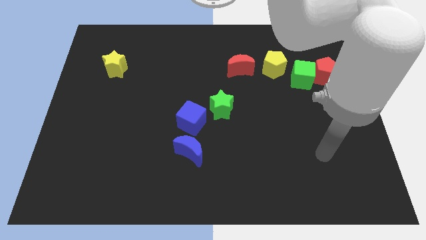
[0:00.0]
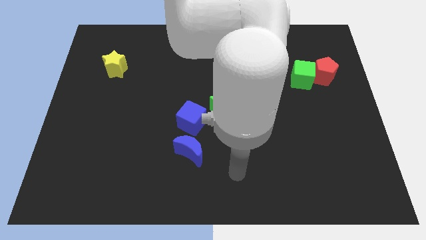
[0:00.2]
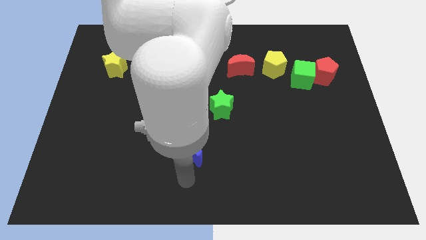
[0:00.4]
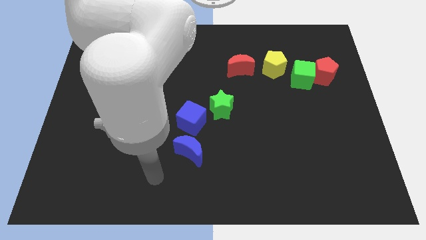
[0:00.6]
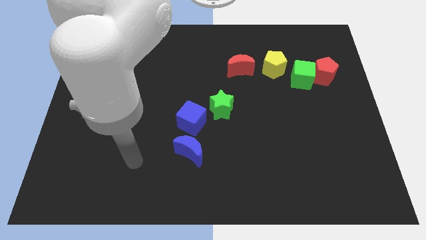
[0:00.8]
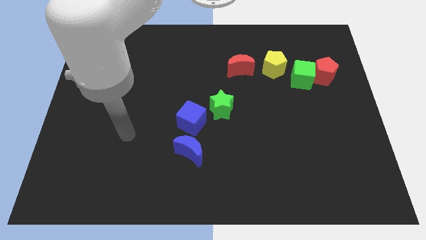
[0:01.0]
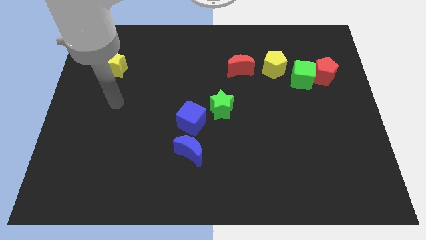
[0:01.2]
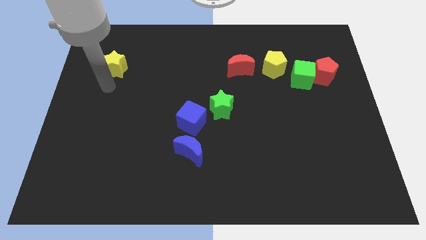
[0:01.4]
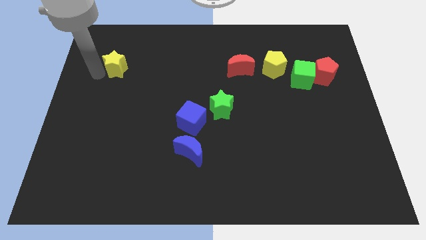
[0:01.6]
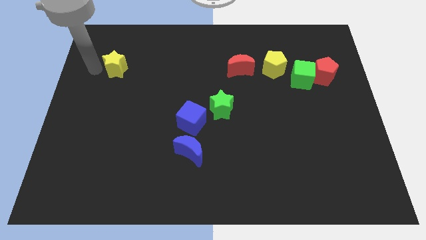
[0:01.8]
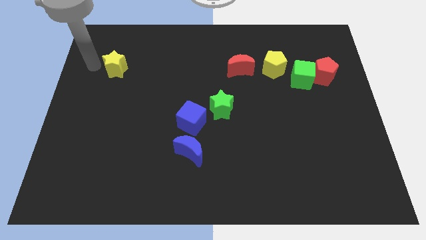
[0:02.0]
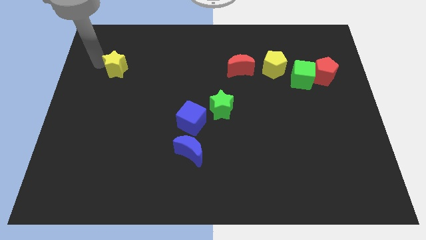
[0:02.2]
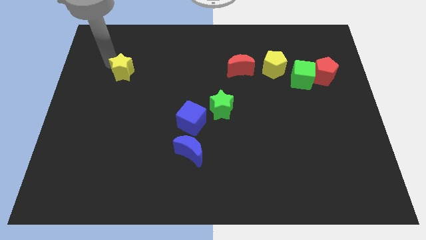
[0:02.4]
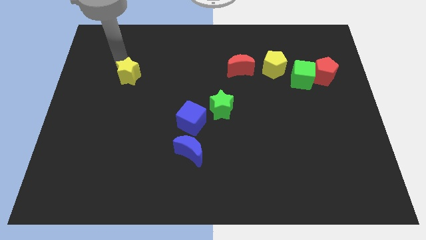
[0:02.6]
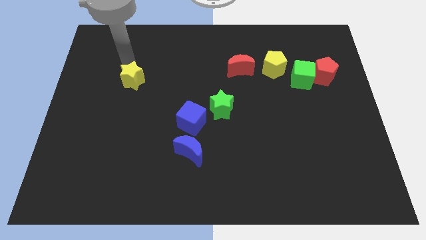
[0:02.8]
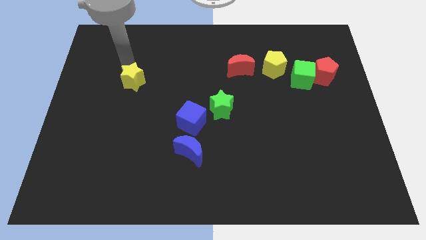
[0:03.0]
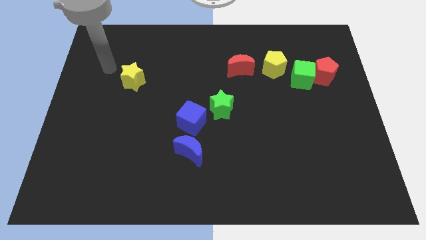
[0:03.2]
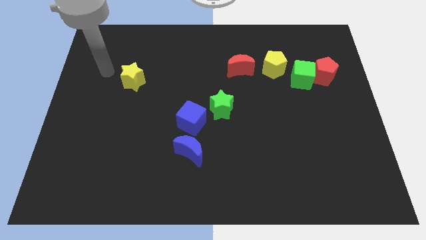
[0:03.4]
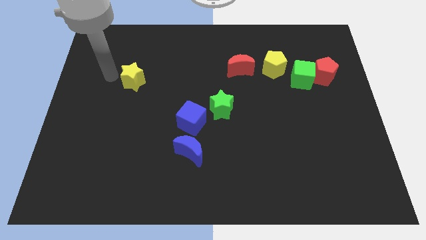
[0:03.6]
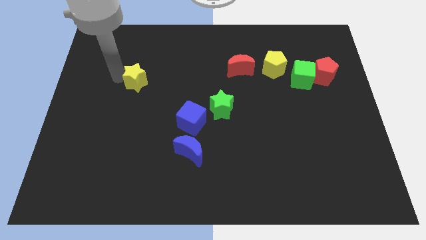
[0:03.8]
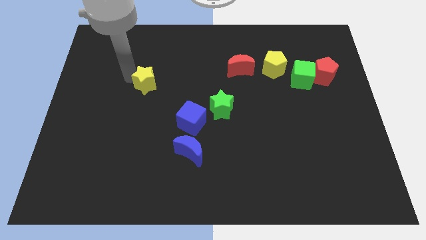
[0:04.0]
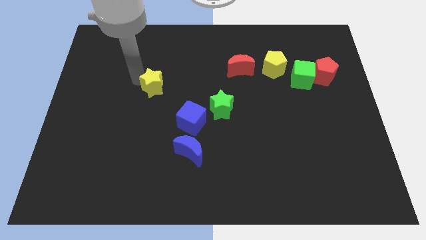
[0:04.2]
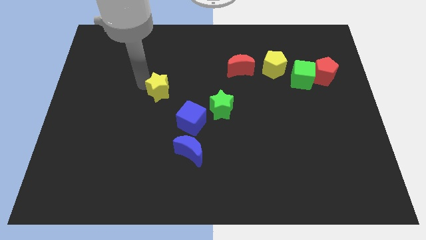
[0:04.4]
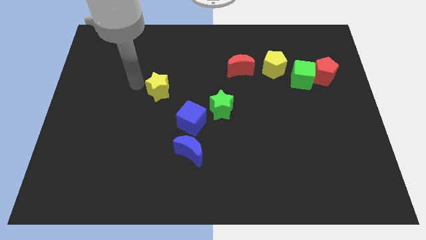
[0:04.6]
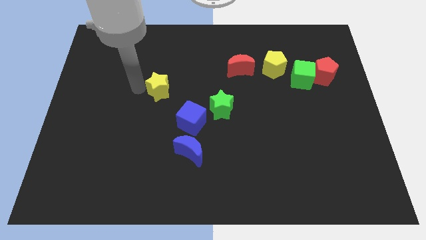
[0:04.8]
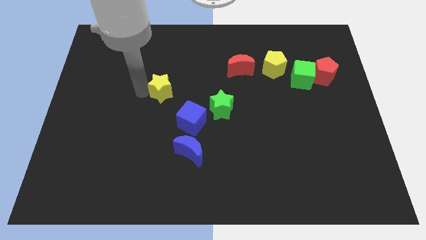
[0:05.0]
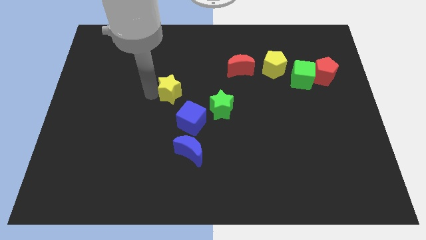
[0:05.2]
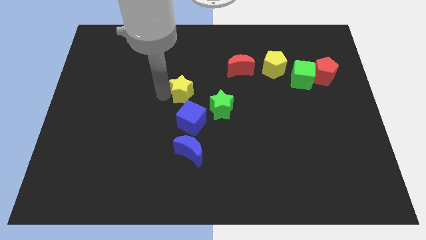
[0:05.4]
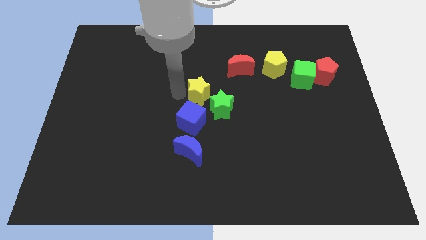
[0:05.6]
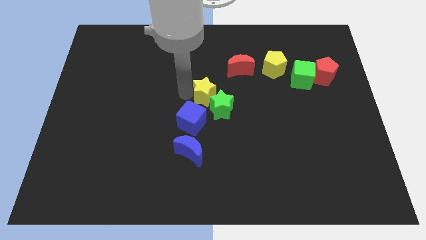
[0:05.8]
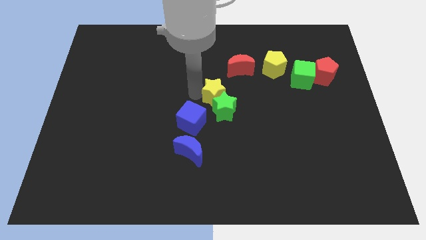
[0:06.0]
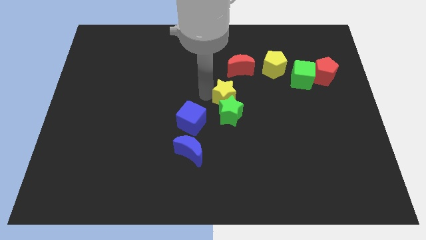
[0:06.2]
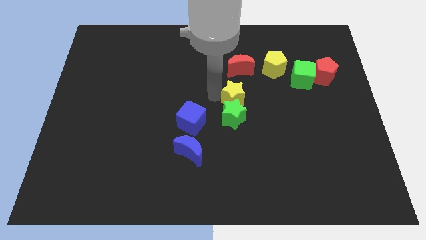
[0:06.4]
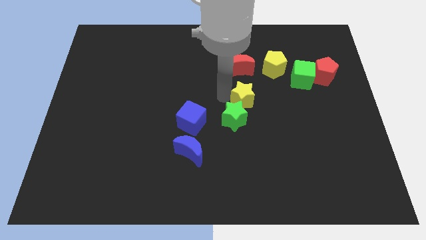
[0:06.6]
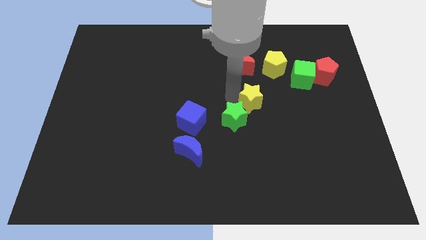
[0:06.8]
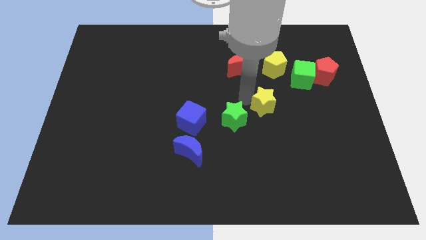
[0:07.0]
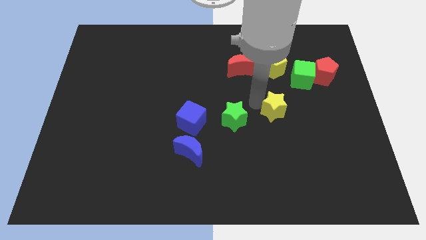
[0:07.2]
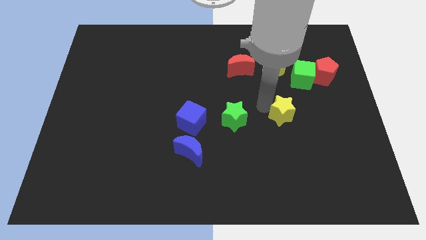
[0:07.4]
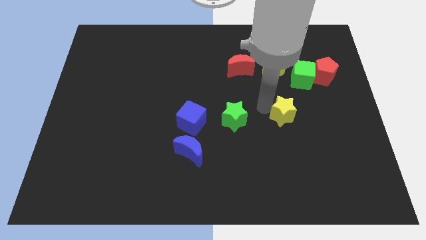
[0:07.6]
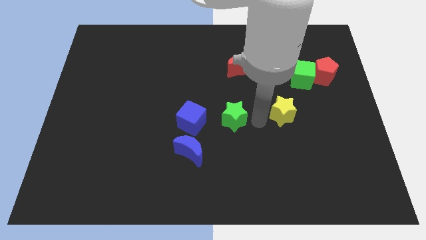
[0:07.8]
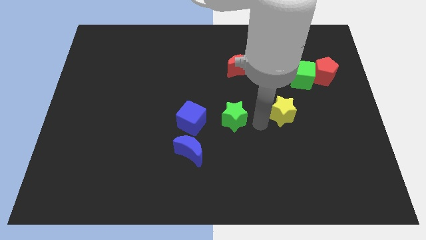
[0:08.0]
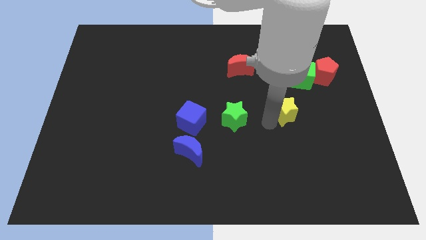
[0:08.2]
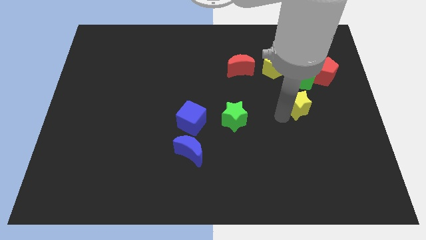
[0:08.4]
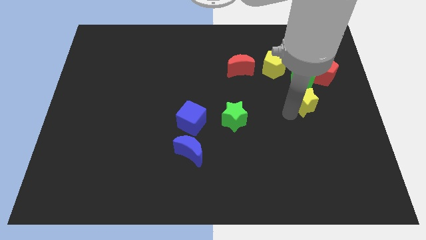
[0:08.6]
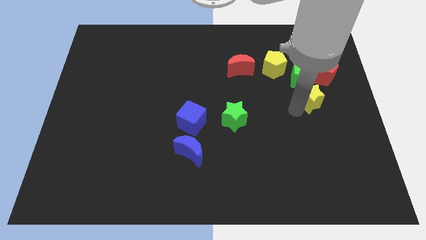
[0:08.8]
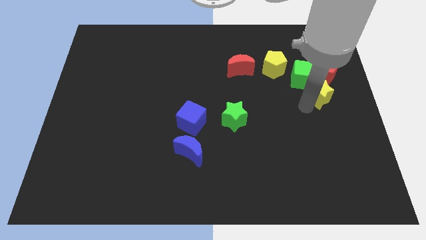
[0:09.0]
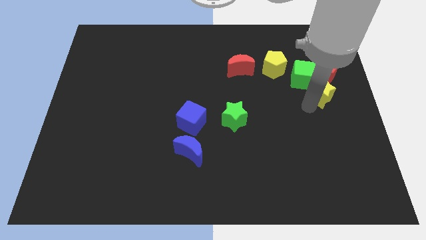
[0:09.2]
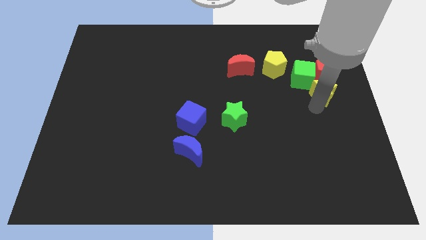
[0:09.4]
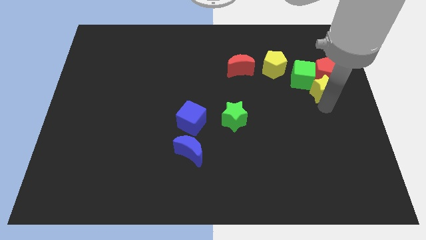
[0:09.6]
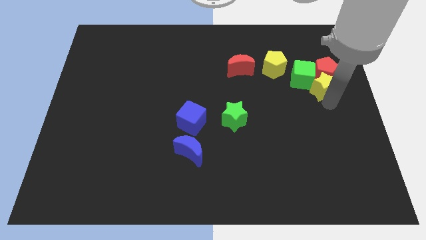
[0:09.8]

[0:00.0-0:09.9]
move the yellow star next to the red pentagon

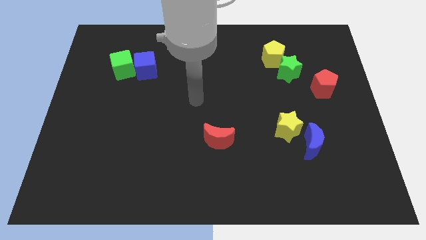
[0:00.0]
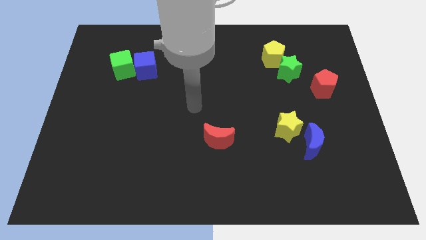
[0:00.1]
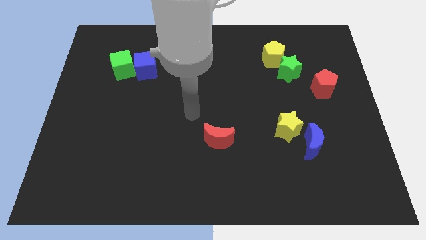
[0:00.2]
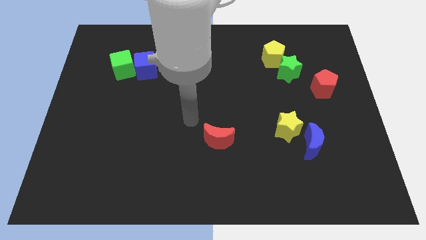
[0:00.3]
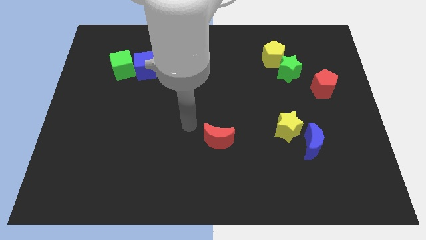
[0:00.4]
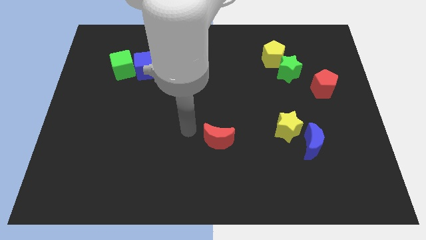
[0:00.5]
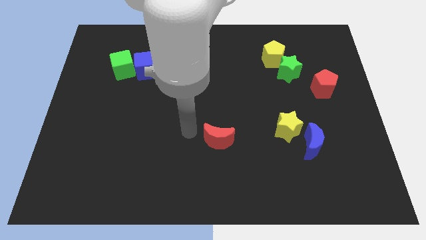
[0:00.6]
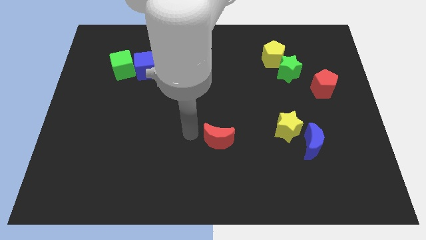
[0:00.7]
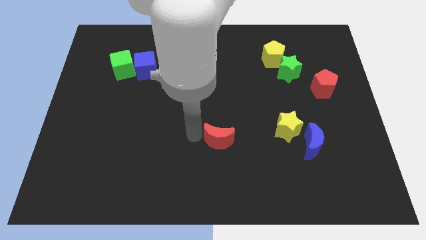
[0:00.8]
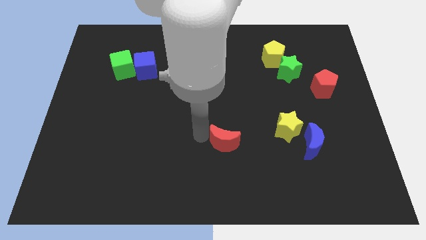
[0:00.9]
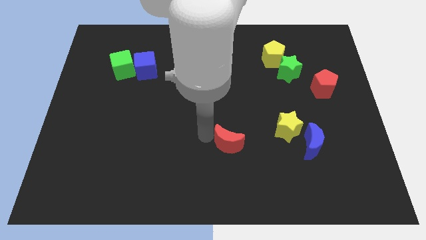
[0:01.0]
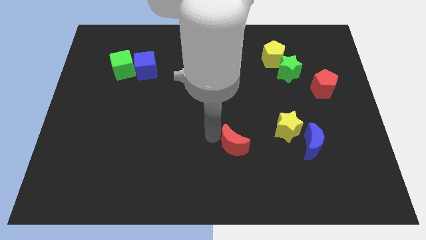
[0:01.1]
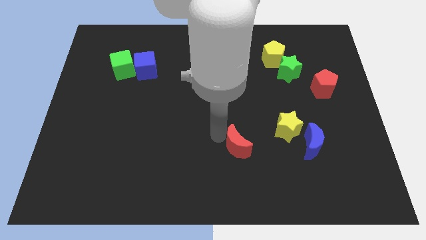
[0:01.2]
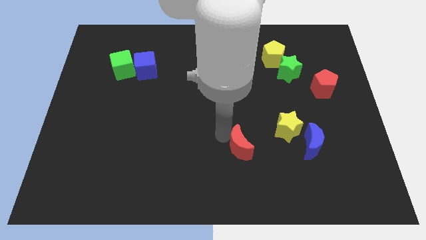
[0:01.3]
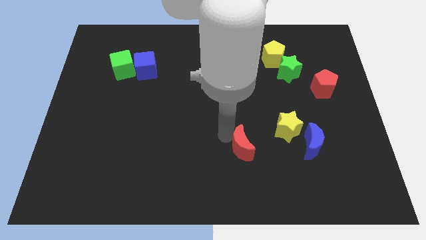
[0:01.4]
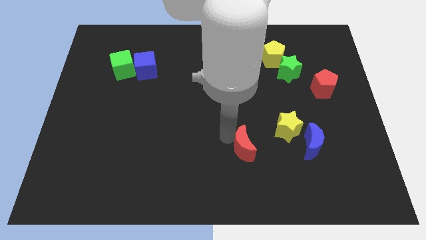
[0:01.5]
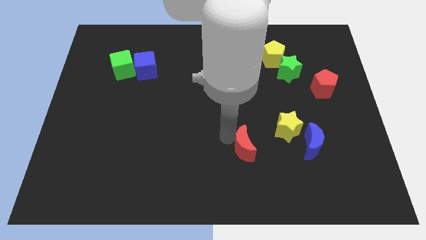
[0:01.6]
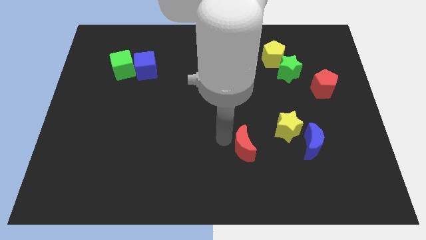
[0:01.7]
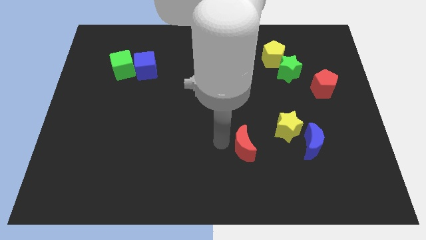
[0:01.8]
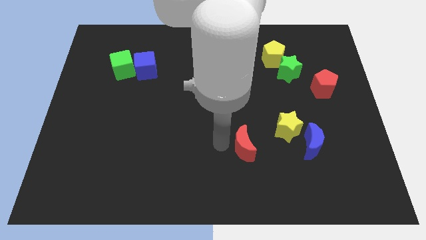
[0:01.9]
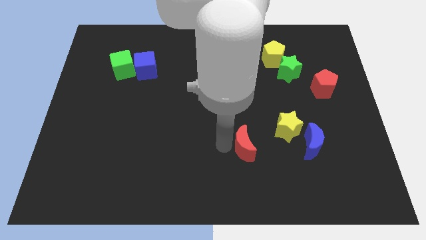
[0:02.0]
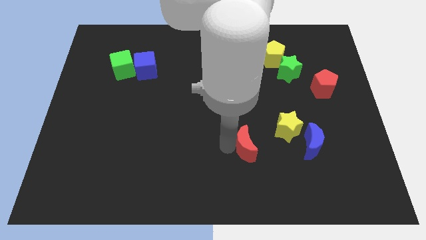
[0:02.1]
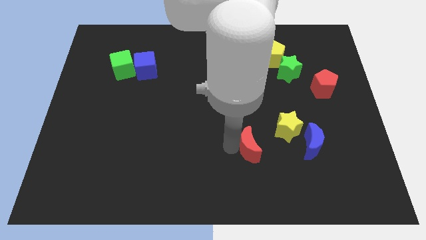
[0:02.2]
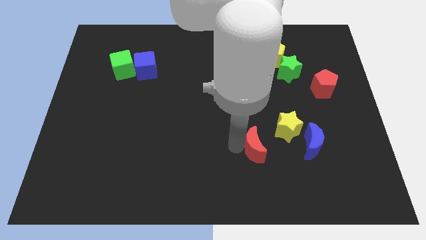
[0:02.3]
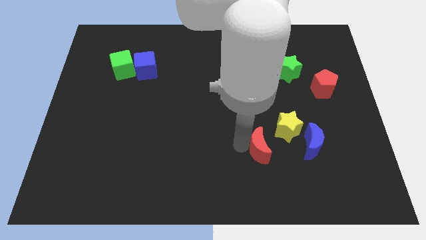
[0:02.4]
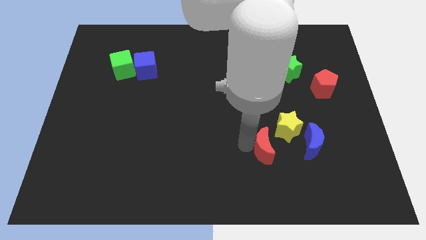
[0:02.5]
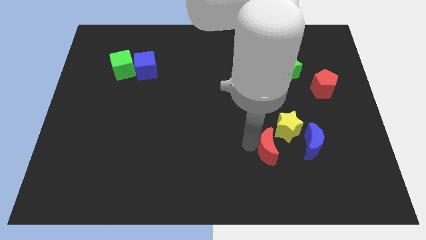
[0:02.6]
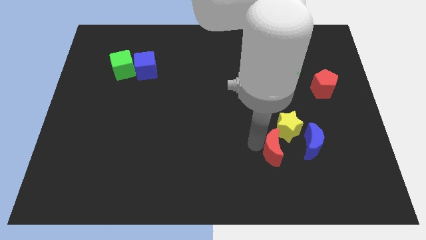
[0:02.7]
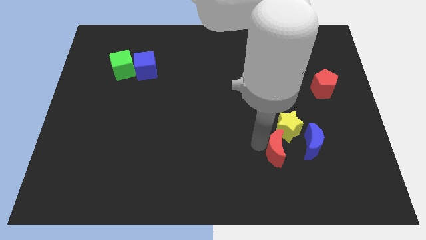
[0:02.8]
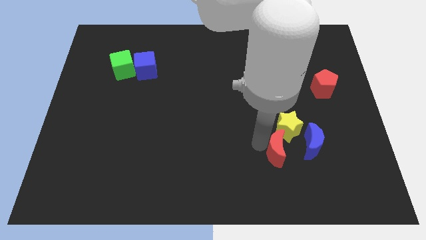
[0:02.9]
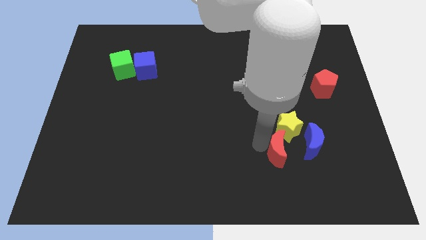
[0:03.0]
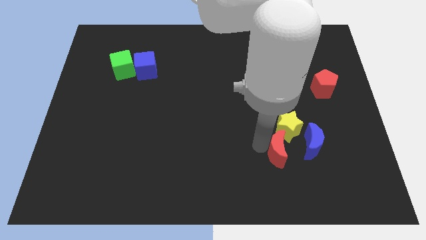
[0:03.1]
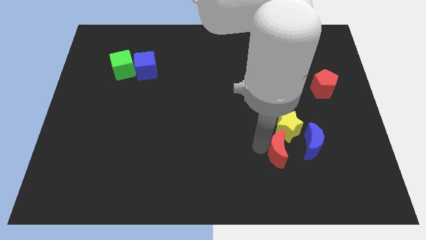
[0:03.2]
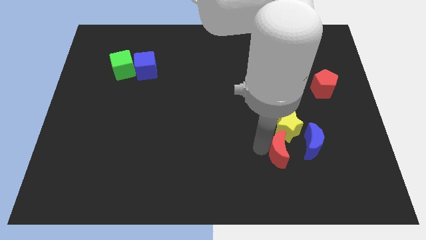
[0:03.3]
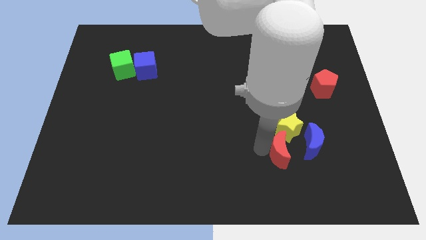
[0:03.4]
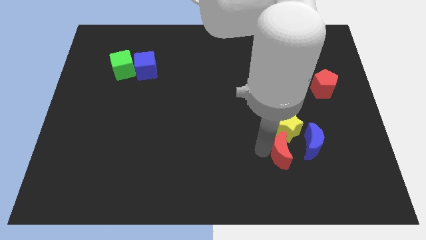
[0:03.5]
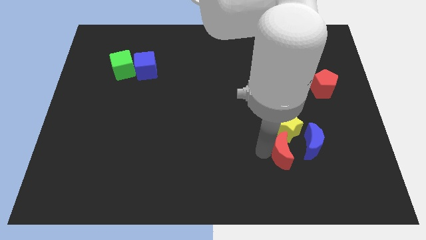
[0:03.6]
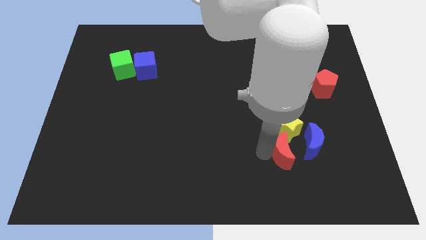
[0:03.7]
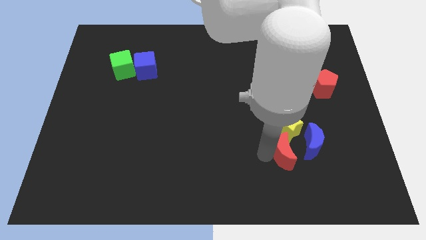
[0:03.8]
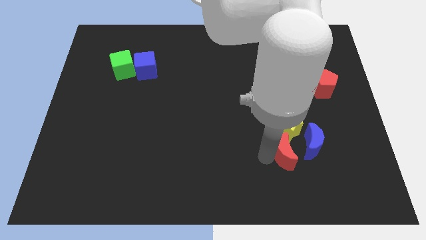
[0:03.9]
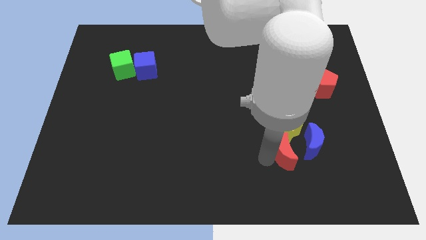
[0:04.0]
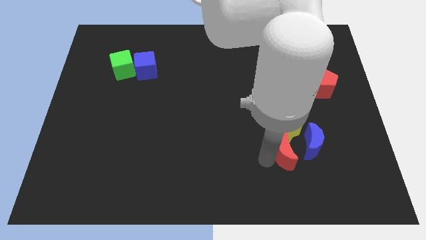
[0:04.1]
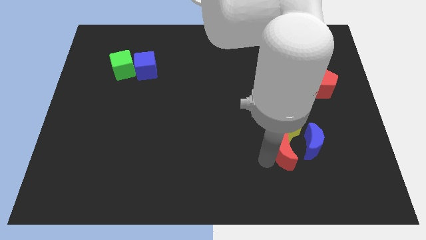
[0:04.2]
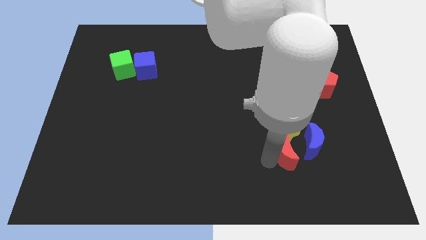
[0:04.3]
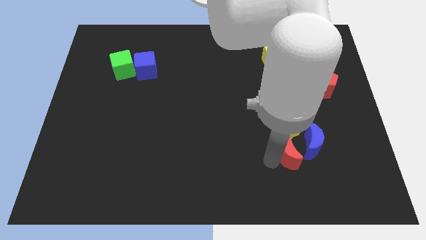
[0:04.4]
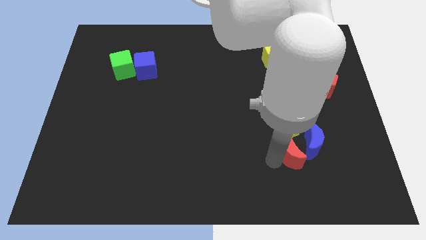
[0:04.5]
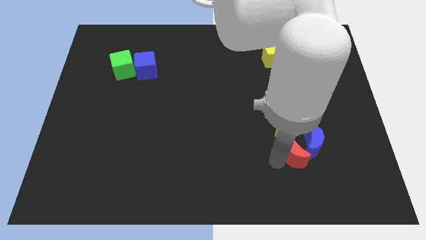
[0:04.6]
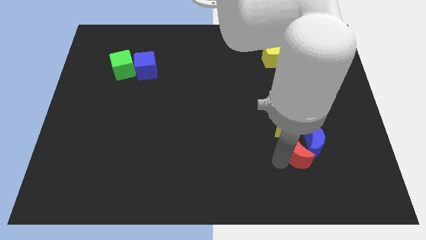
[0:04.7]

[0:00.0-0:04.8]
push the red moon towards the blue moon
